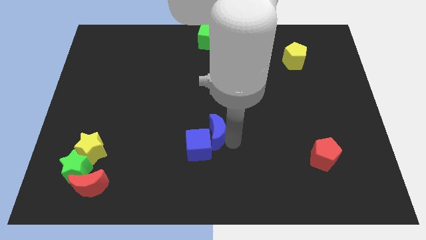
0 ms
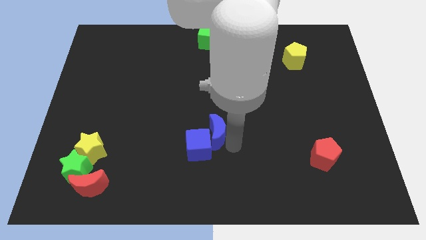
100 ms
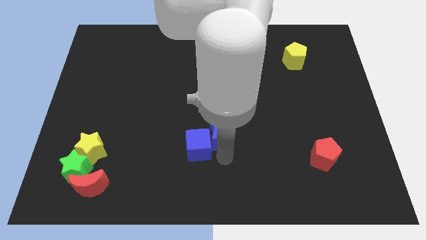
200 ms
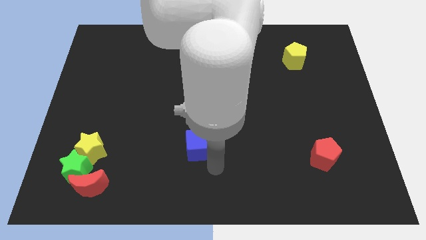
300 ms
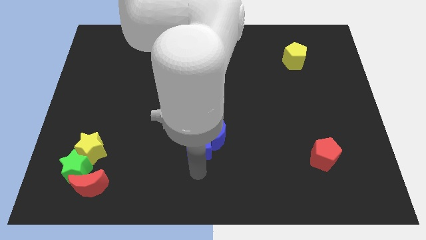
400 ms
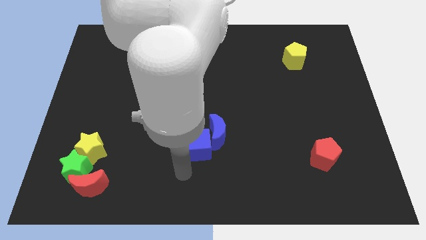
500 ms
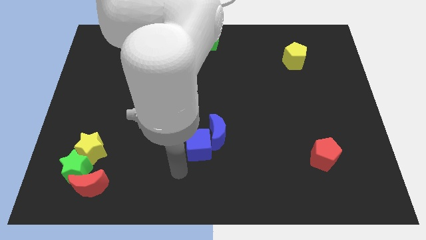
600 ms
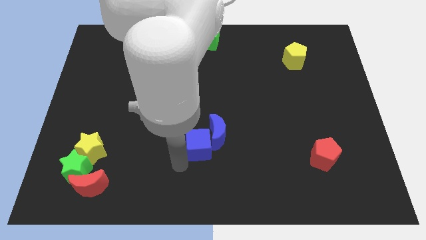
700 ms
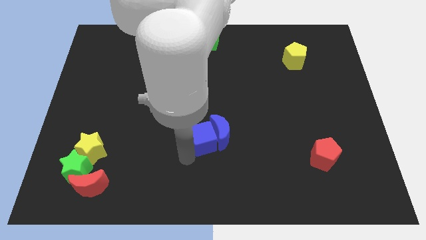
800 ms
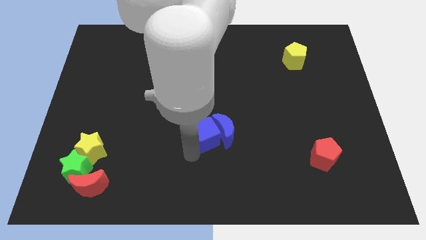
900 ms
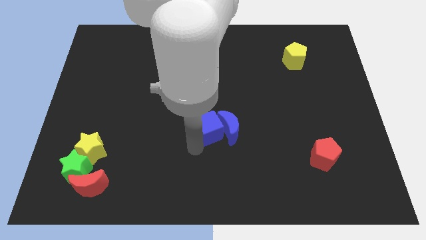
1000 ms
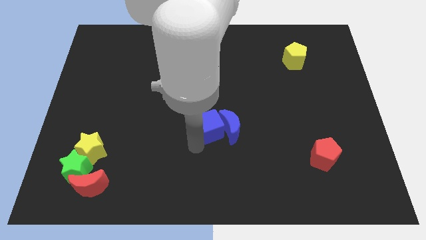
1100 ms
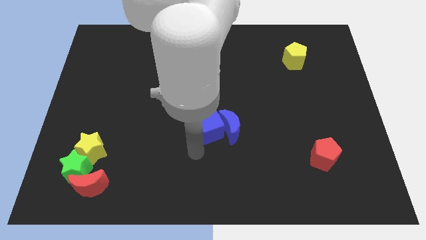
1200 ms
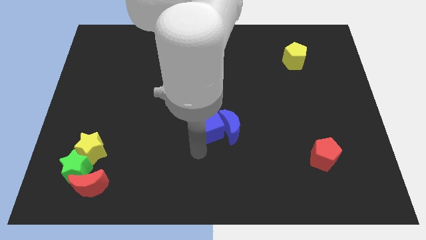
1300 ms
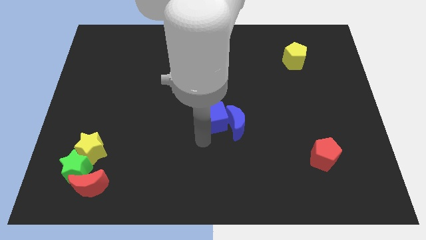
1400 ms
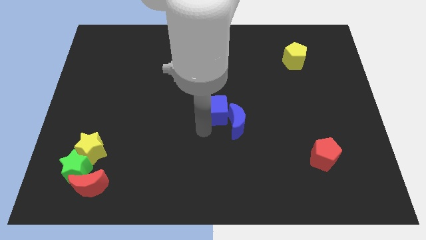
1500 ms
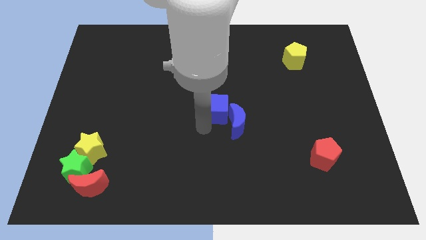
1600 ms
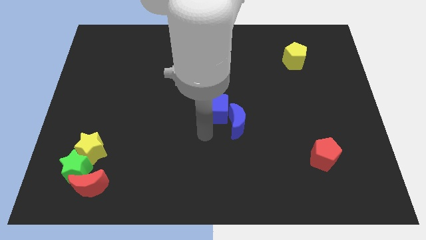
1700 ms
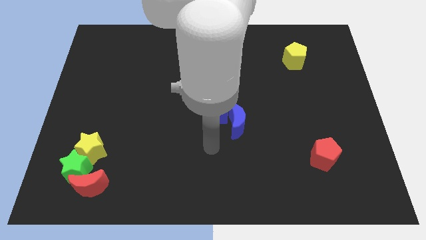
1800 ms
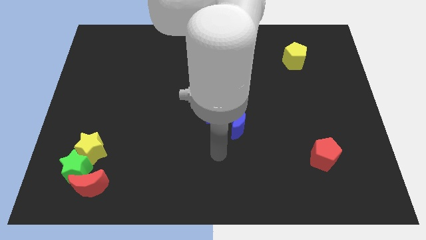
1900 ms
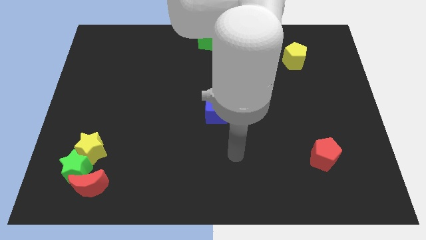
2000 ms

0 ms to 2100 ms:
drag the blue blocks to the center of the board

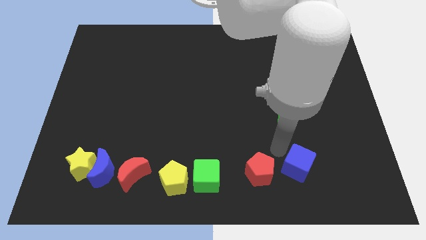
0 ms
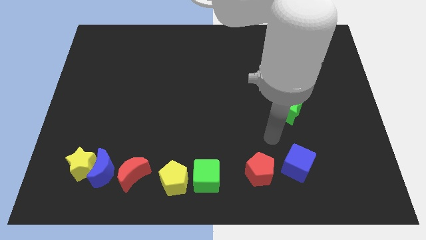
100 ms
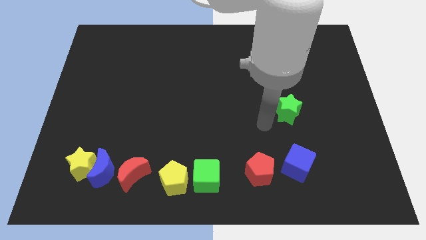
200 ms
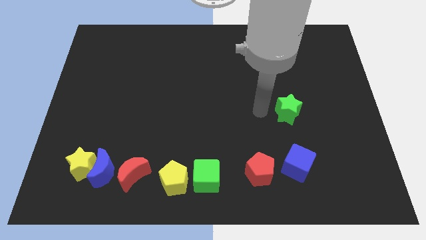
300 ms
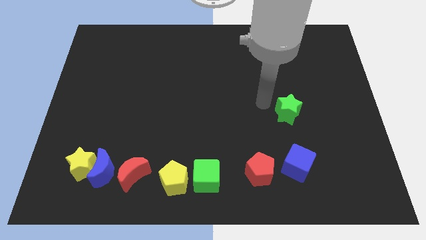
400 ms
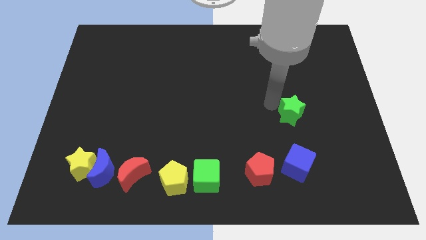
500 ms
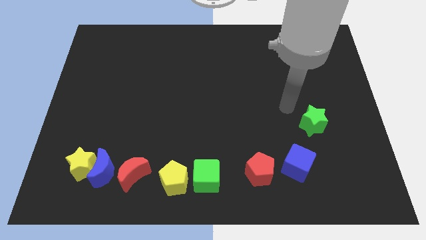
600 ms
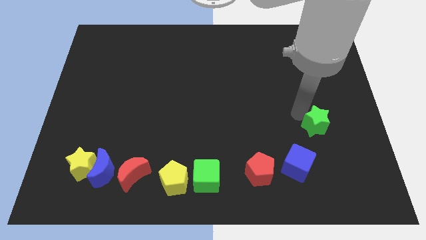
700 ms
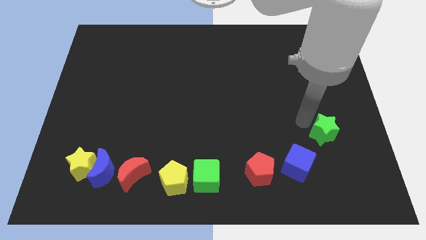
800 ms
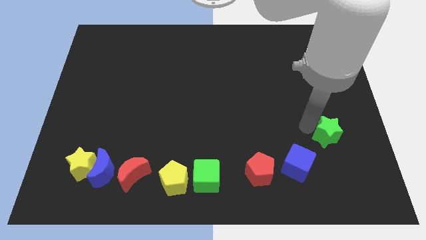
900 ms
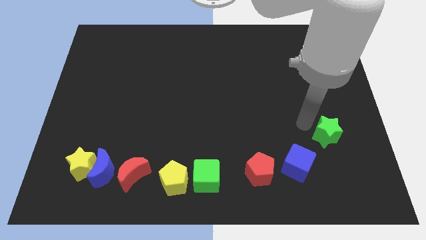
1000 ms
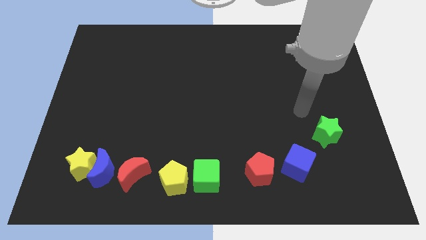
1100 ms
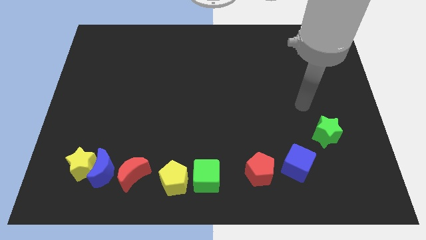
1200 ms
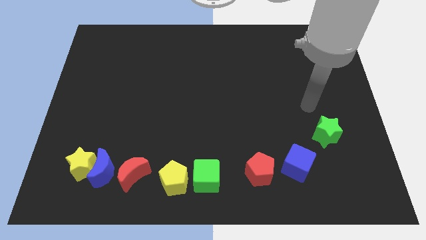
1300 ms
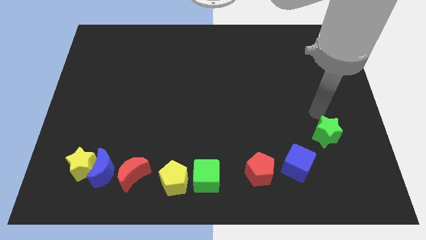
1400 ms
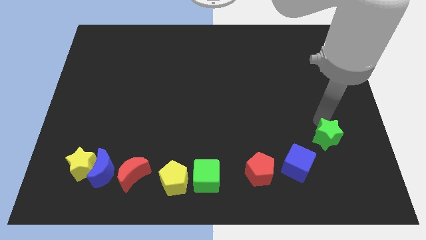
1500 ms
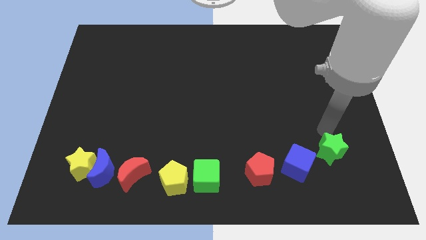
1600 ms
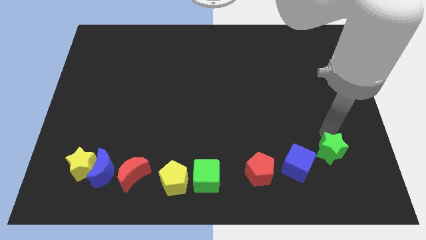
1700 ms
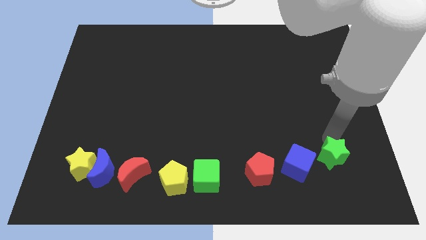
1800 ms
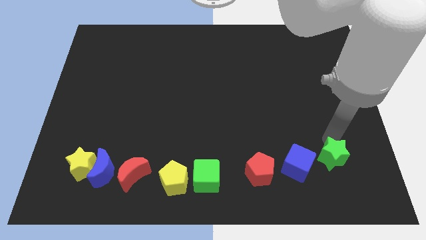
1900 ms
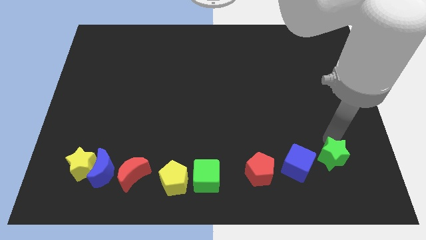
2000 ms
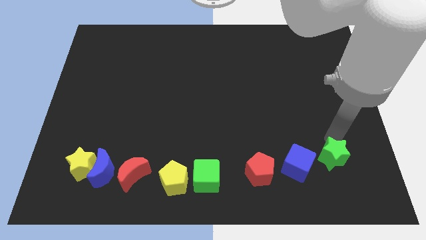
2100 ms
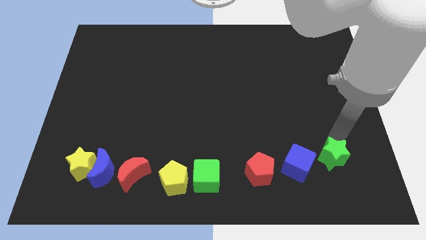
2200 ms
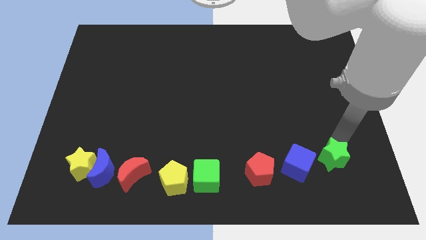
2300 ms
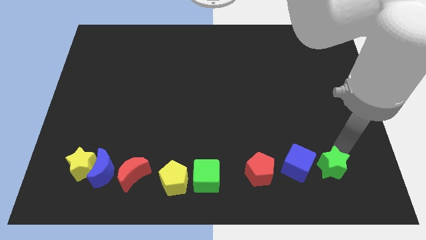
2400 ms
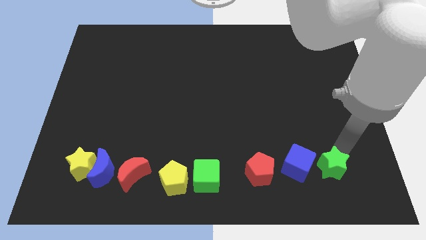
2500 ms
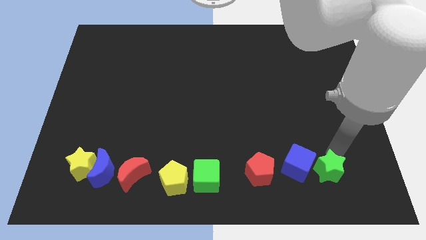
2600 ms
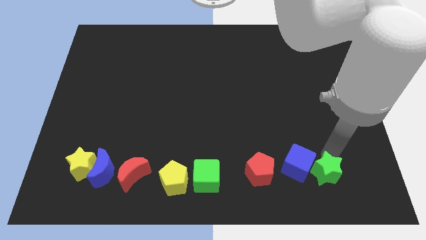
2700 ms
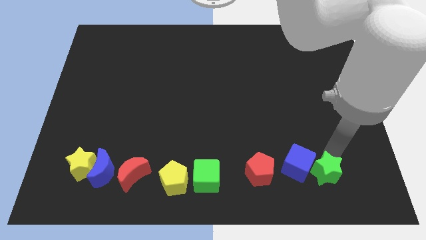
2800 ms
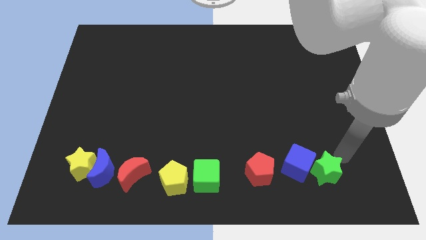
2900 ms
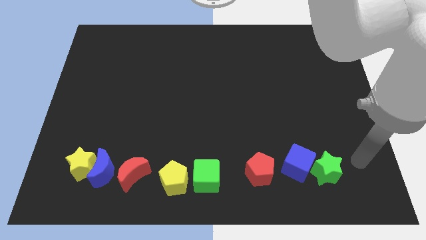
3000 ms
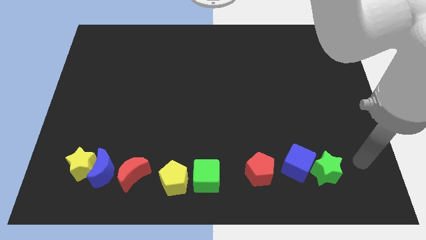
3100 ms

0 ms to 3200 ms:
place green star to the right of the blue cube

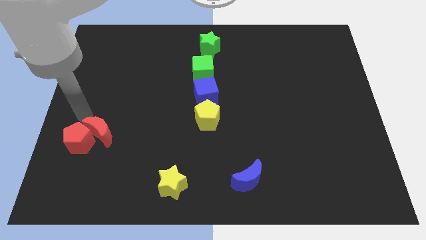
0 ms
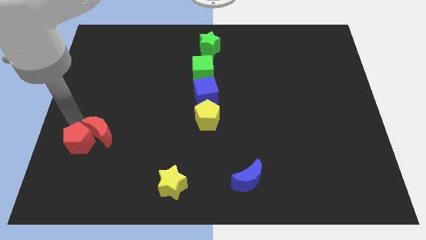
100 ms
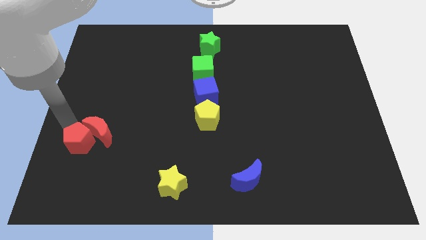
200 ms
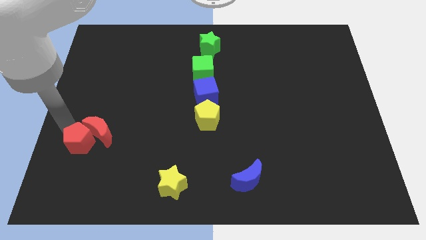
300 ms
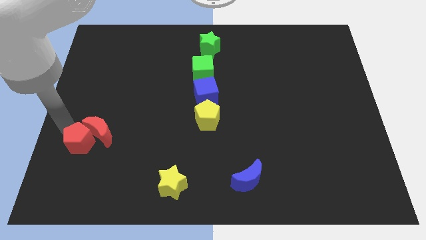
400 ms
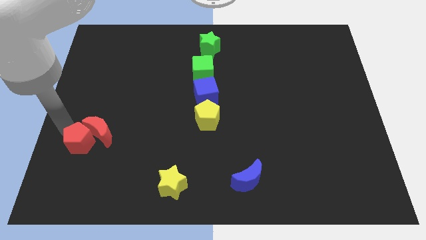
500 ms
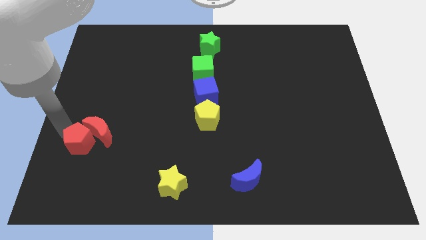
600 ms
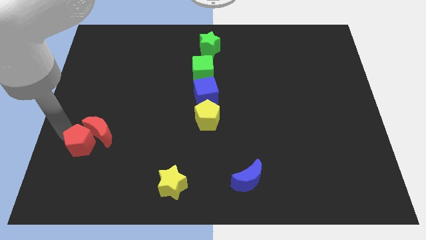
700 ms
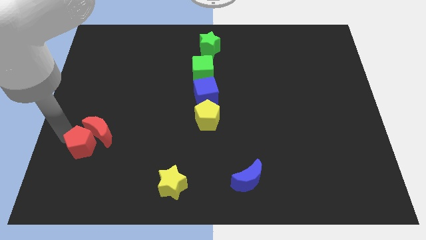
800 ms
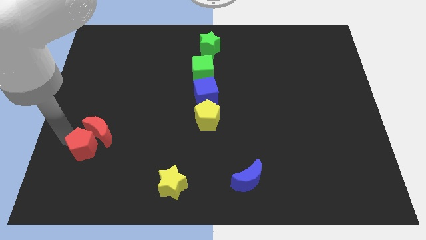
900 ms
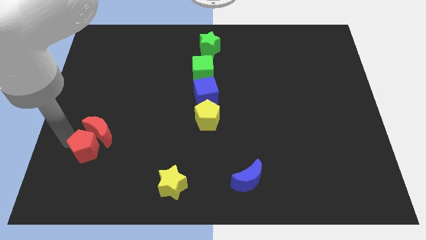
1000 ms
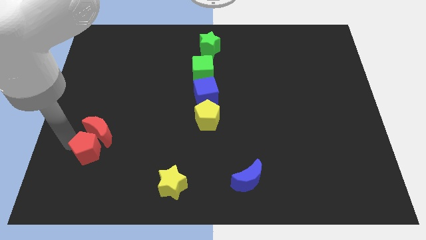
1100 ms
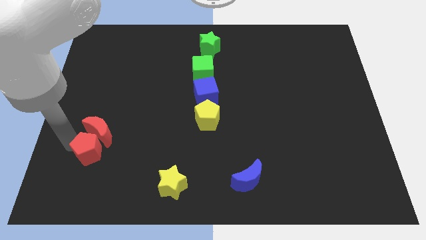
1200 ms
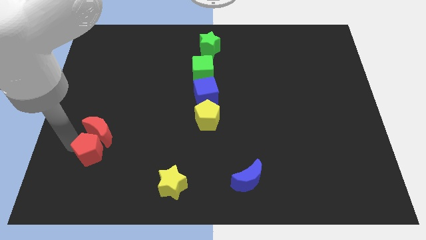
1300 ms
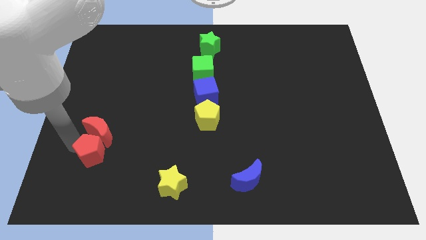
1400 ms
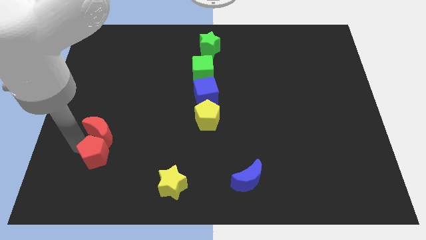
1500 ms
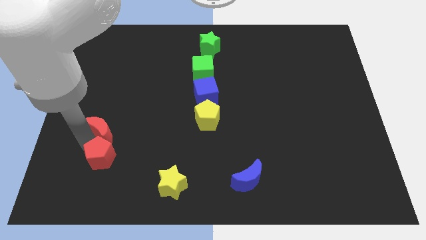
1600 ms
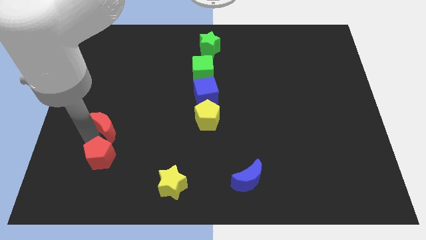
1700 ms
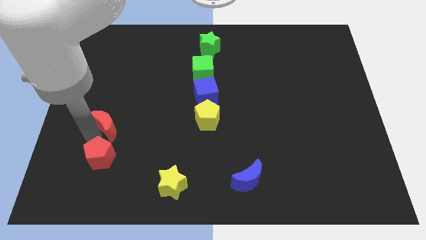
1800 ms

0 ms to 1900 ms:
push the red pentagon slightly to the right

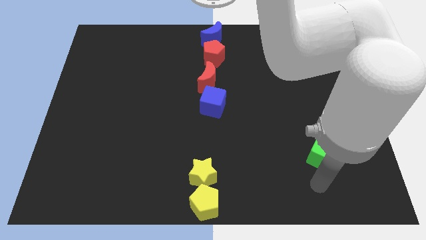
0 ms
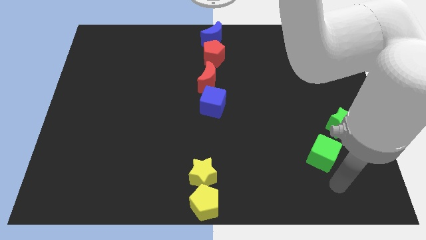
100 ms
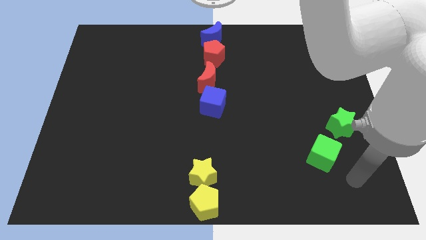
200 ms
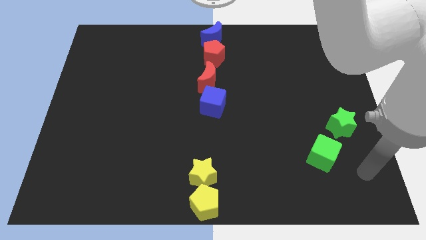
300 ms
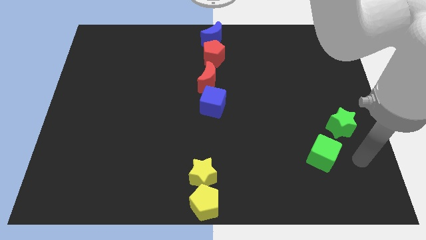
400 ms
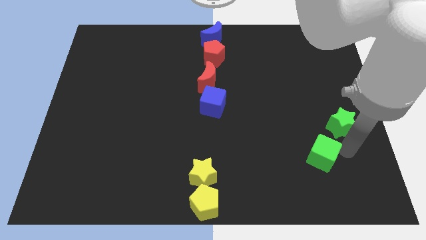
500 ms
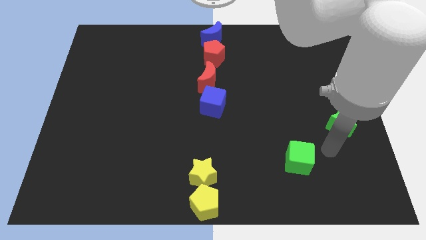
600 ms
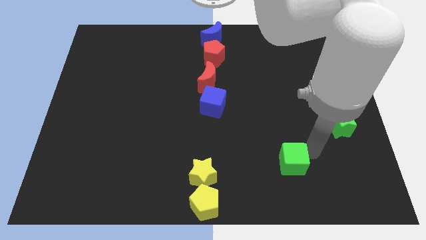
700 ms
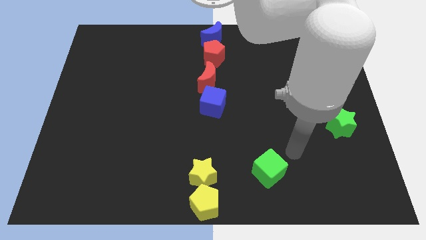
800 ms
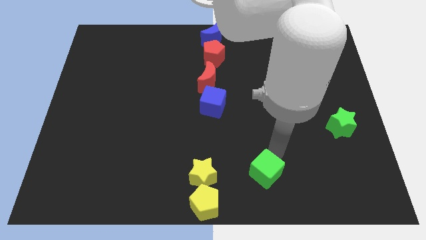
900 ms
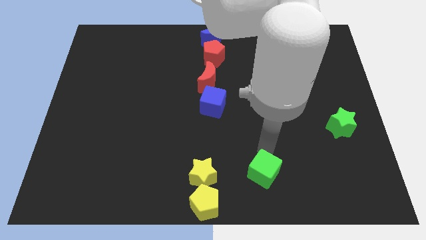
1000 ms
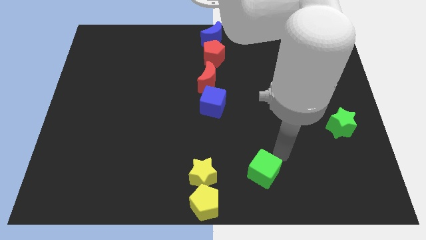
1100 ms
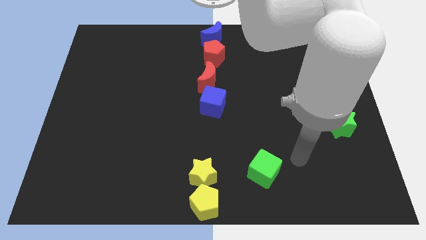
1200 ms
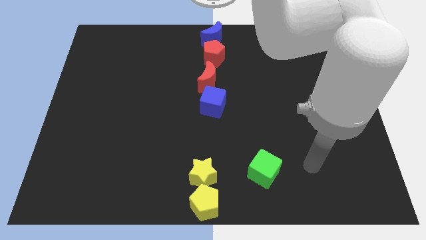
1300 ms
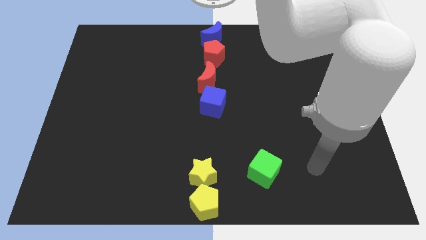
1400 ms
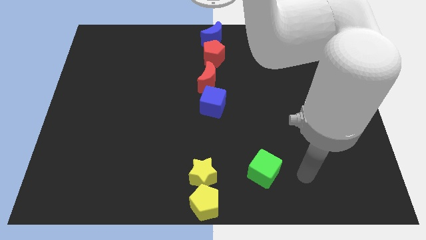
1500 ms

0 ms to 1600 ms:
place the green cube right to the yellow star

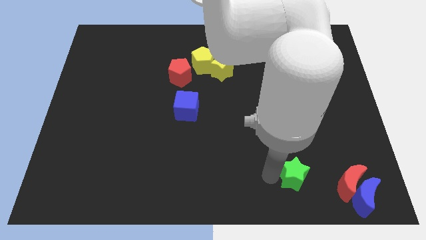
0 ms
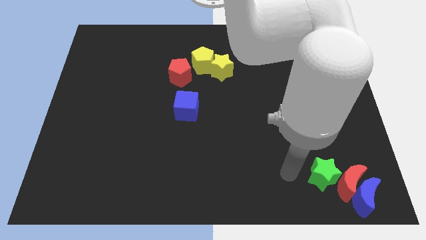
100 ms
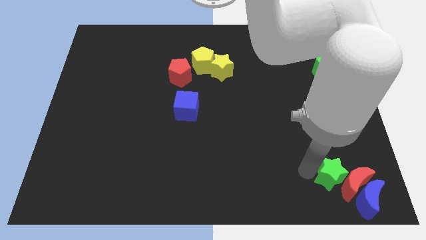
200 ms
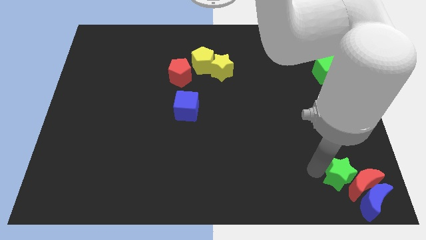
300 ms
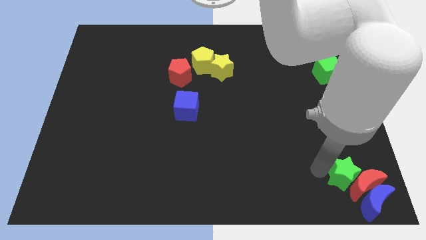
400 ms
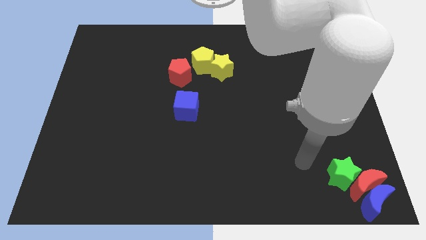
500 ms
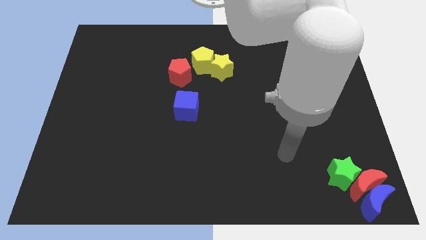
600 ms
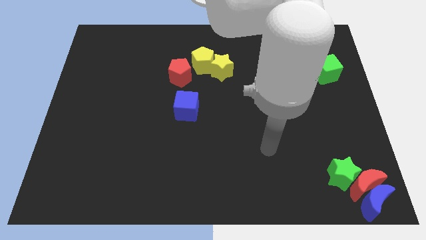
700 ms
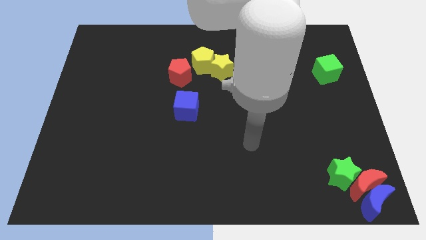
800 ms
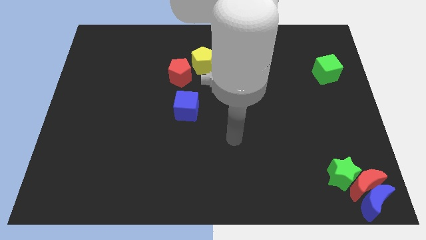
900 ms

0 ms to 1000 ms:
push the green star into the group of blocks
